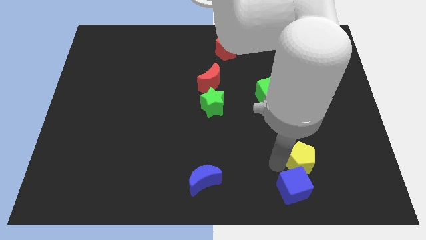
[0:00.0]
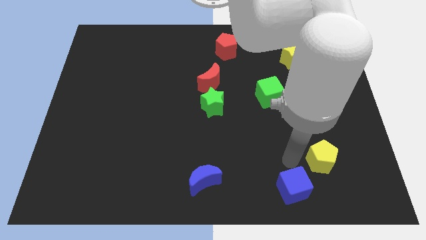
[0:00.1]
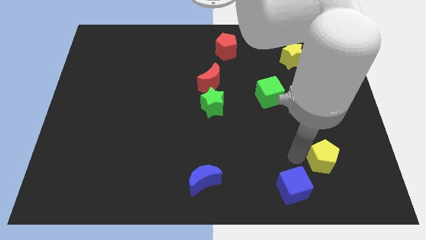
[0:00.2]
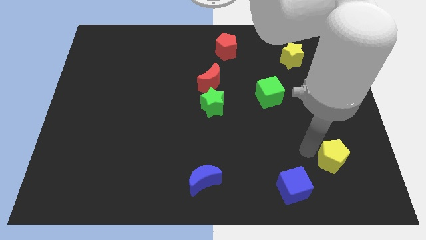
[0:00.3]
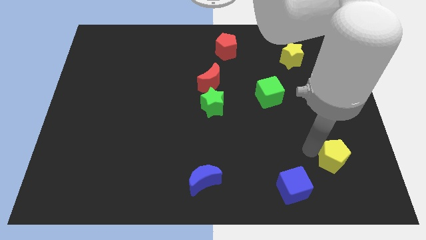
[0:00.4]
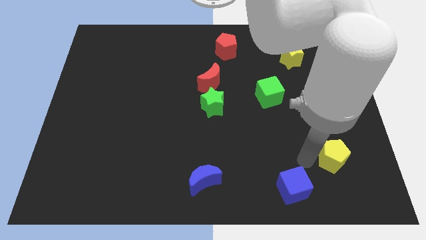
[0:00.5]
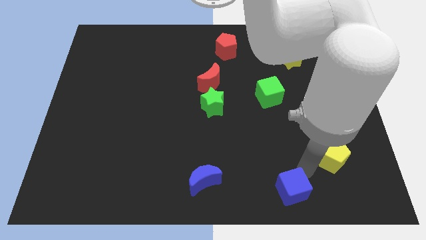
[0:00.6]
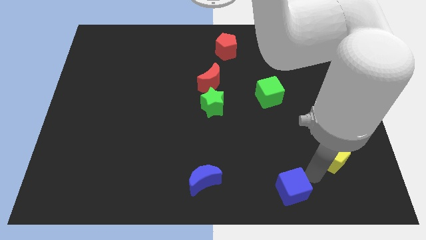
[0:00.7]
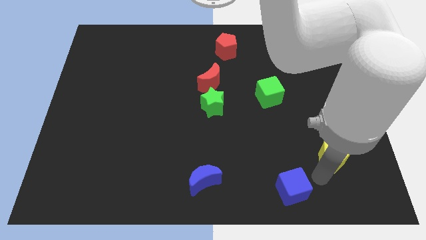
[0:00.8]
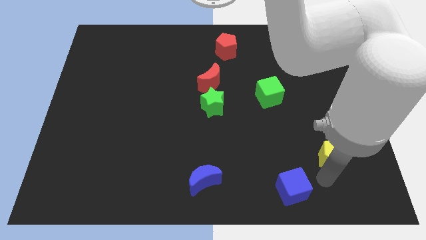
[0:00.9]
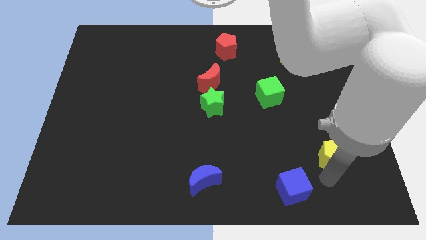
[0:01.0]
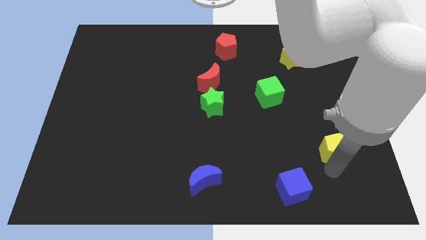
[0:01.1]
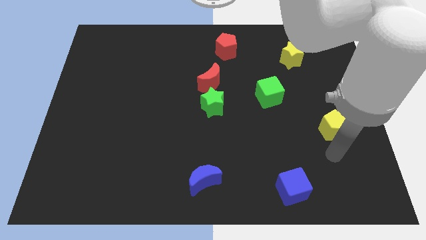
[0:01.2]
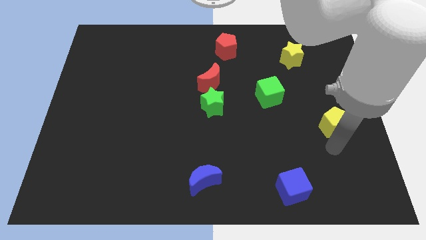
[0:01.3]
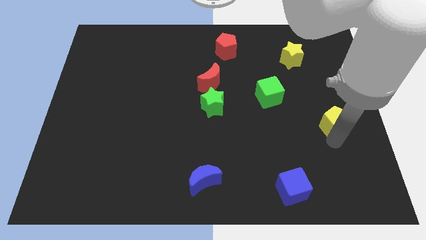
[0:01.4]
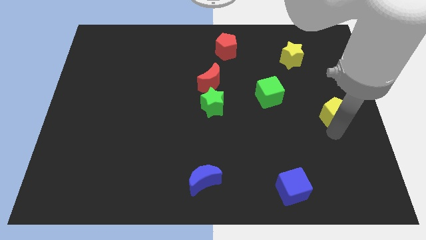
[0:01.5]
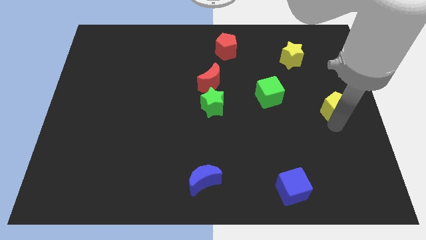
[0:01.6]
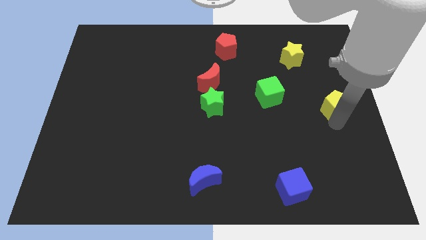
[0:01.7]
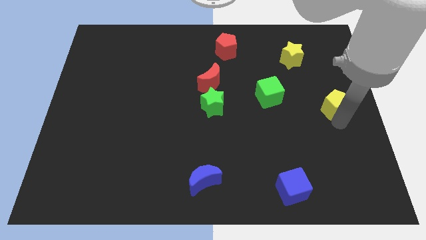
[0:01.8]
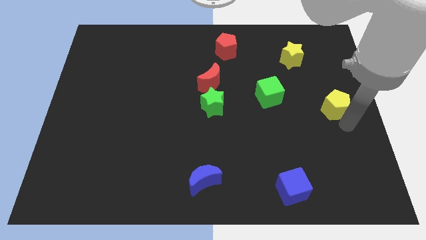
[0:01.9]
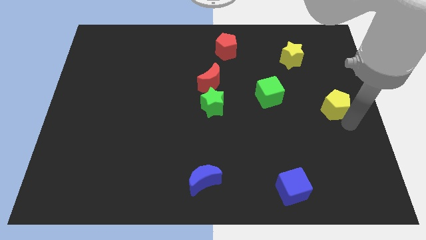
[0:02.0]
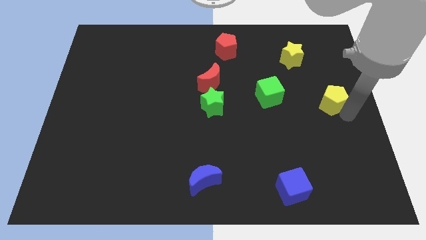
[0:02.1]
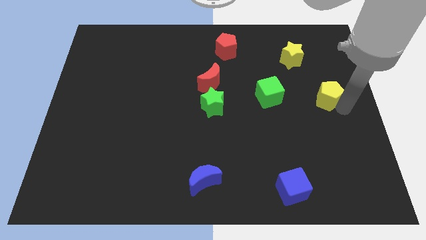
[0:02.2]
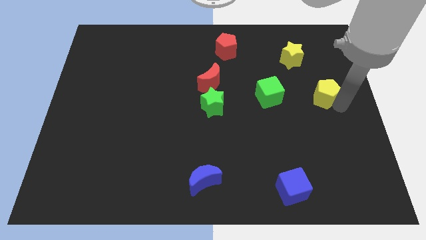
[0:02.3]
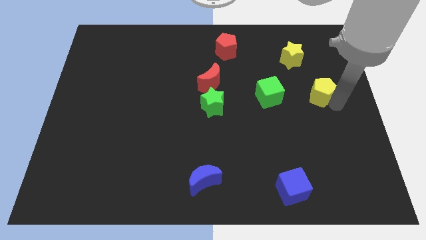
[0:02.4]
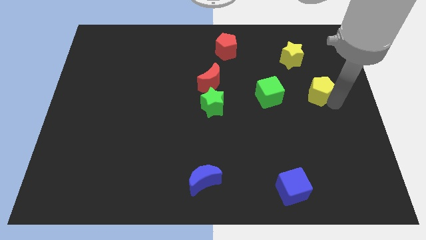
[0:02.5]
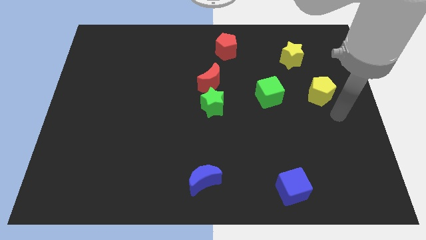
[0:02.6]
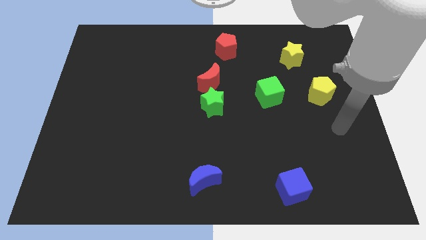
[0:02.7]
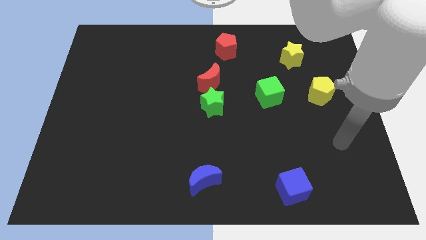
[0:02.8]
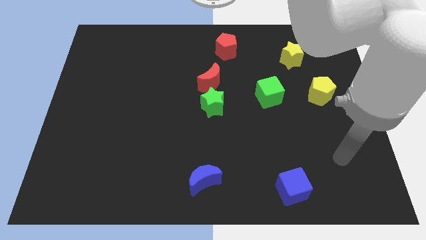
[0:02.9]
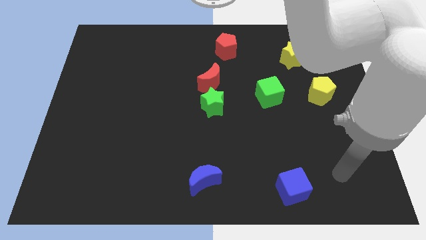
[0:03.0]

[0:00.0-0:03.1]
place yellow pentagon to the right of green cube

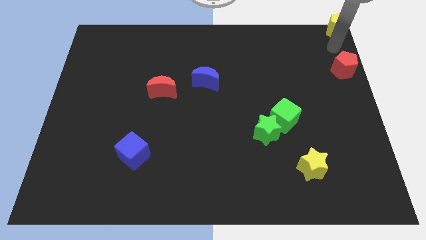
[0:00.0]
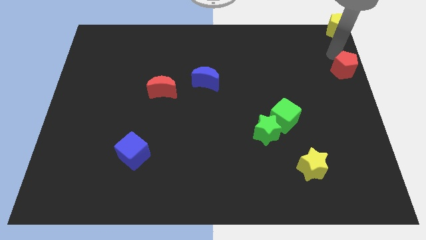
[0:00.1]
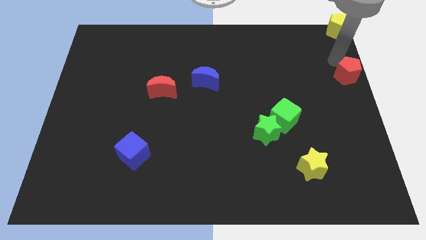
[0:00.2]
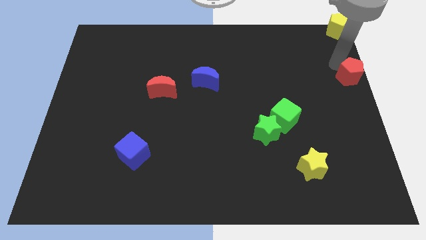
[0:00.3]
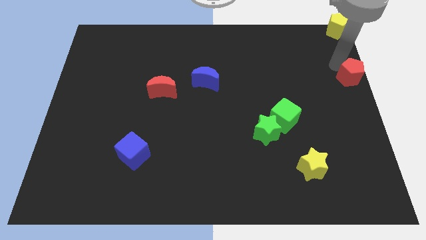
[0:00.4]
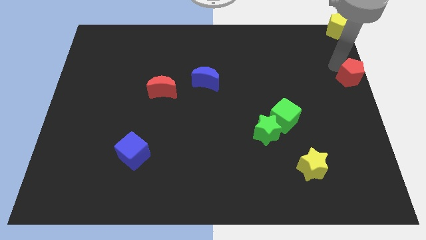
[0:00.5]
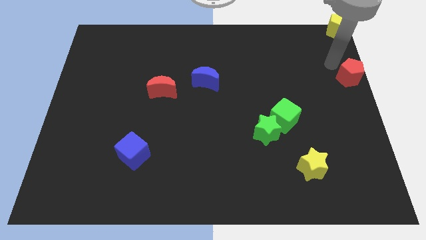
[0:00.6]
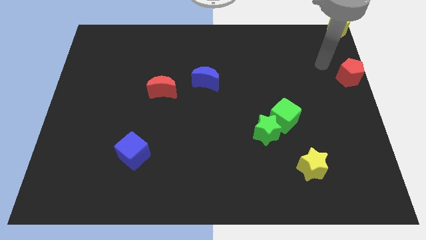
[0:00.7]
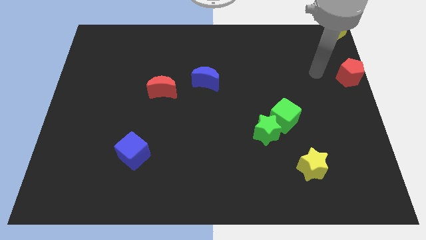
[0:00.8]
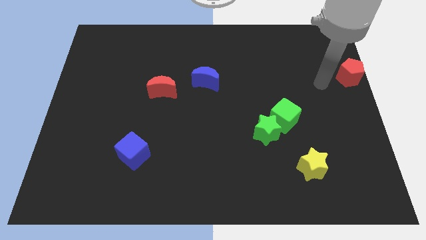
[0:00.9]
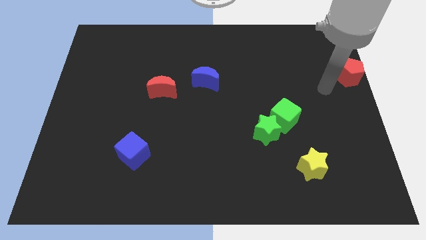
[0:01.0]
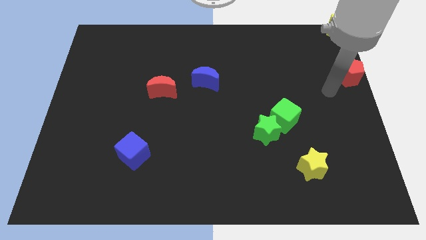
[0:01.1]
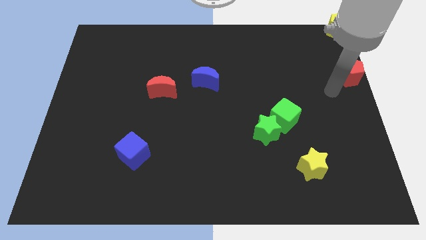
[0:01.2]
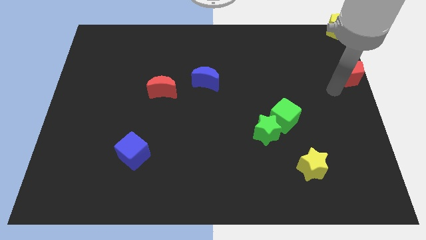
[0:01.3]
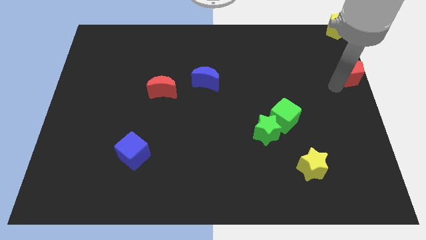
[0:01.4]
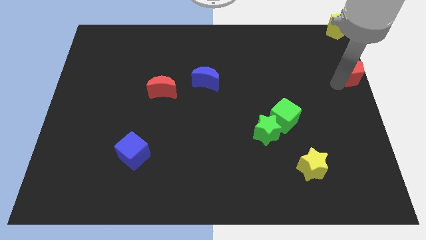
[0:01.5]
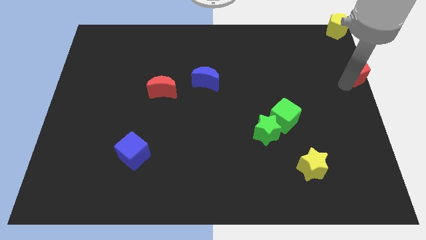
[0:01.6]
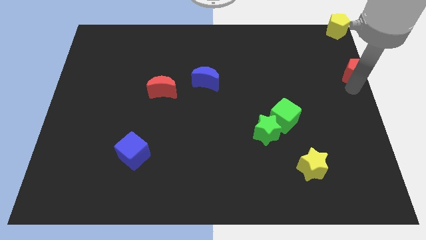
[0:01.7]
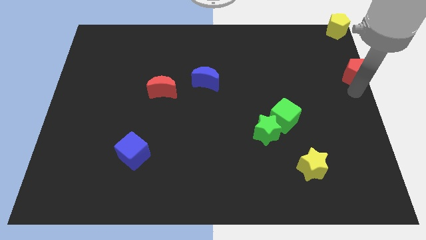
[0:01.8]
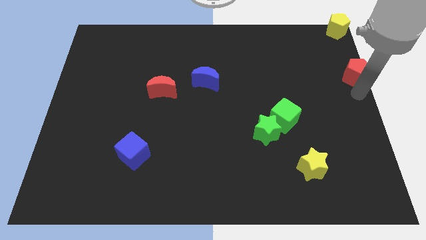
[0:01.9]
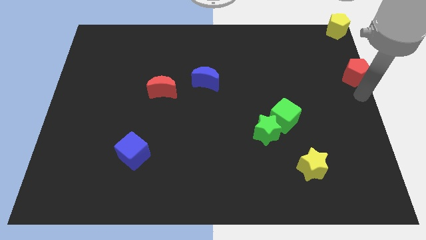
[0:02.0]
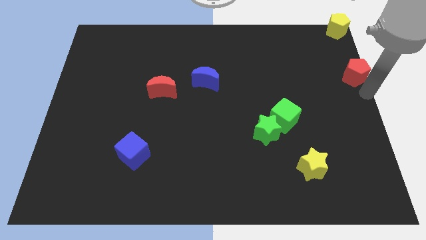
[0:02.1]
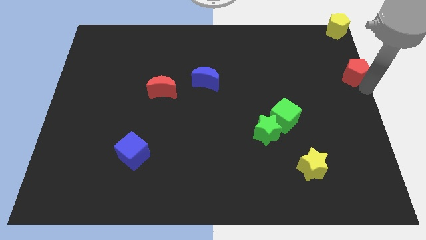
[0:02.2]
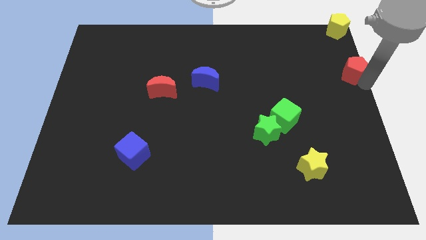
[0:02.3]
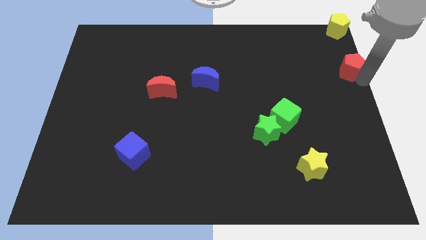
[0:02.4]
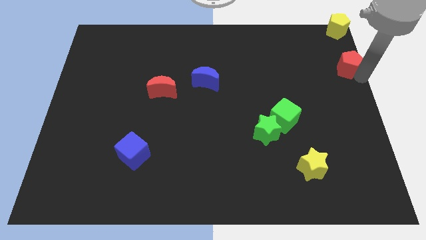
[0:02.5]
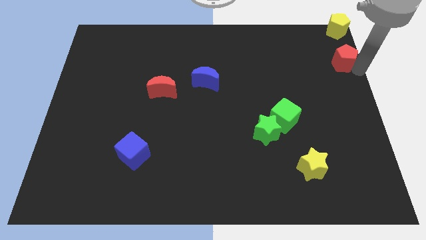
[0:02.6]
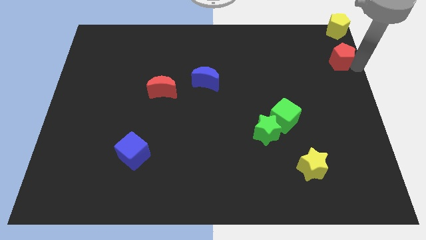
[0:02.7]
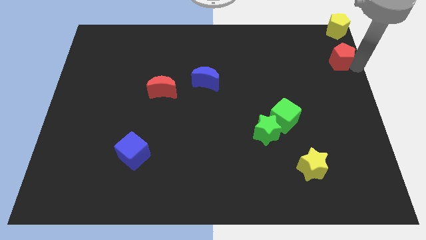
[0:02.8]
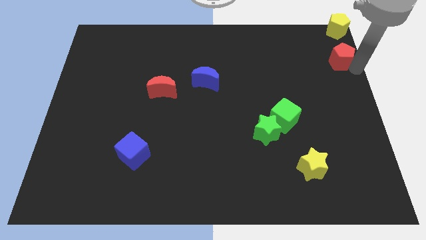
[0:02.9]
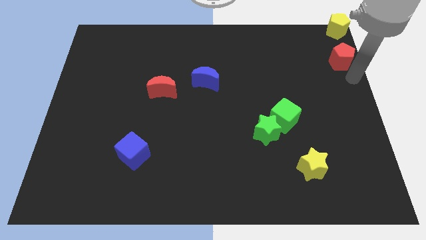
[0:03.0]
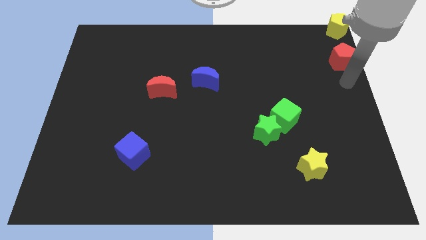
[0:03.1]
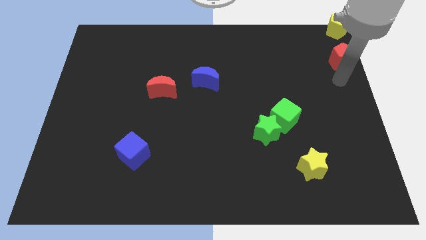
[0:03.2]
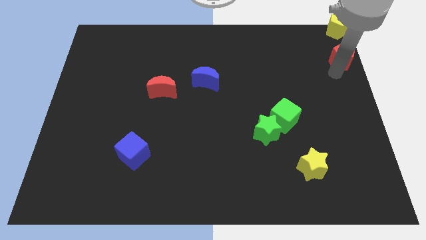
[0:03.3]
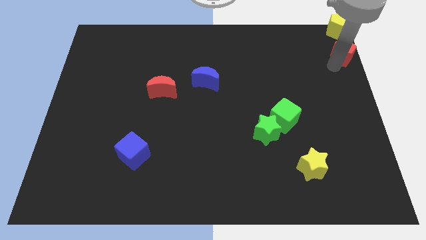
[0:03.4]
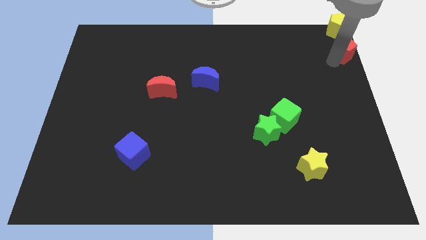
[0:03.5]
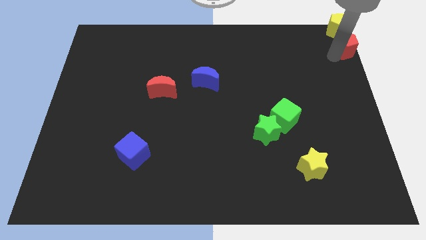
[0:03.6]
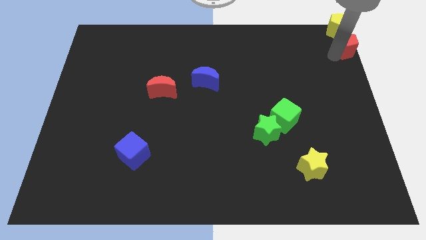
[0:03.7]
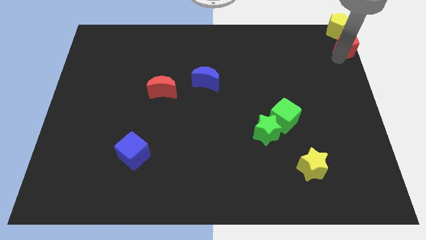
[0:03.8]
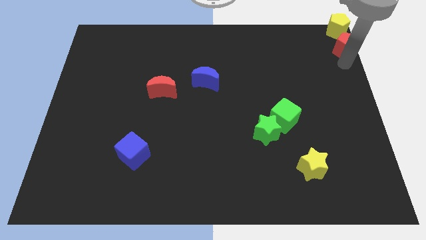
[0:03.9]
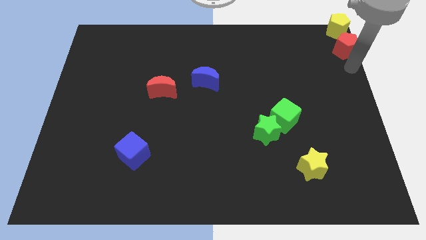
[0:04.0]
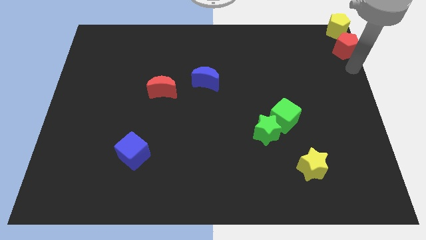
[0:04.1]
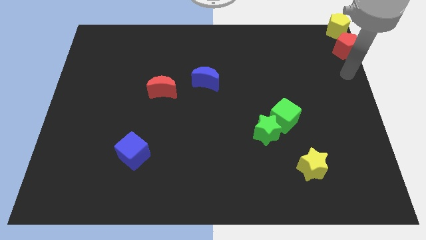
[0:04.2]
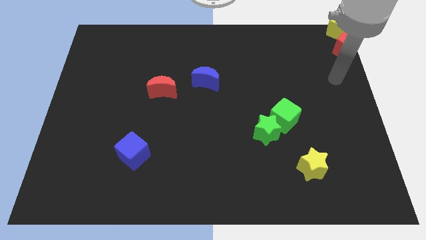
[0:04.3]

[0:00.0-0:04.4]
push the red pentagon into the yellow pentagon

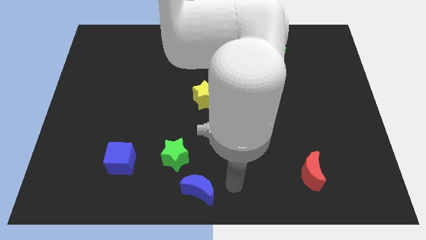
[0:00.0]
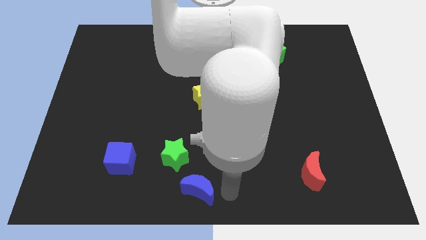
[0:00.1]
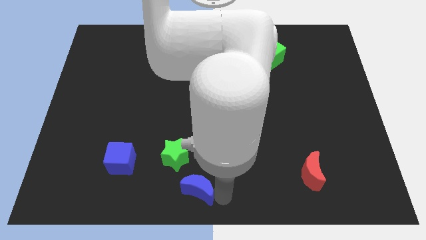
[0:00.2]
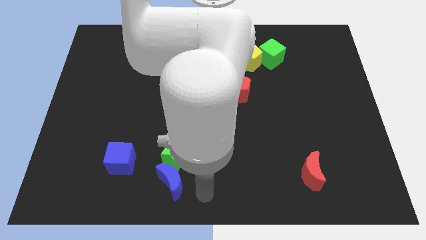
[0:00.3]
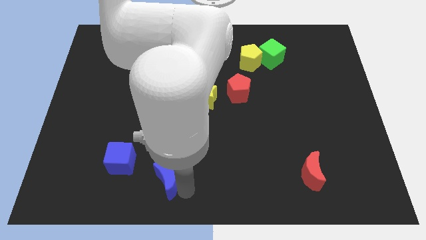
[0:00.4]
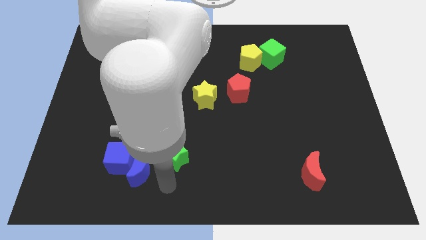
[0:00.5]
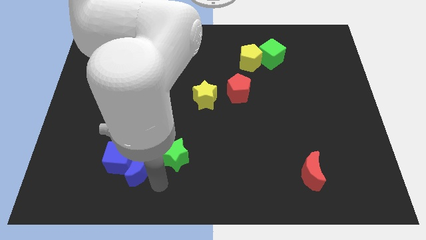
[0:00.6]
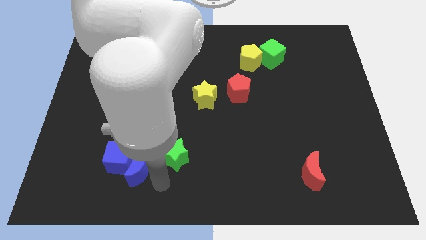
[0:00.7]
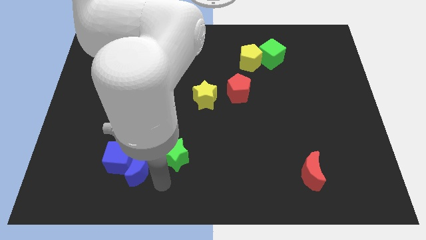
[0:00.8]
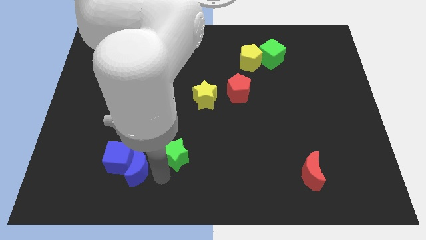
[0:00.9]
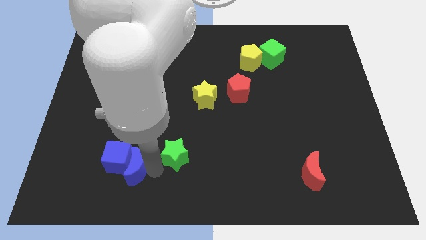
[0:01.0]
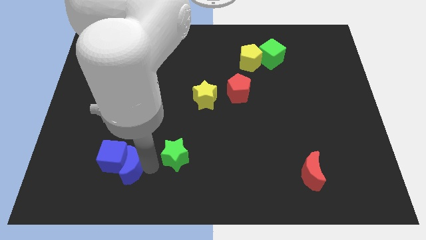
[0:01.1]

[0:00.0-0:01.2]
push the blue moon into the blue cube

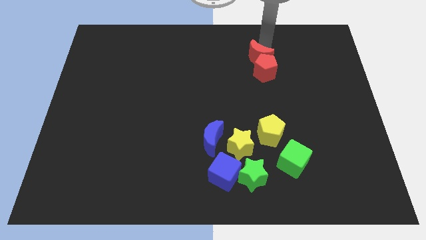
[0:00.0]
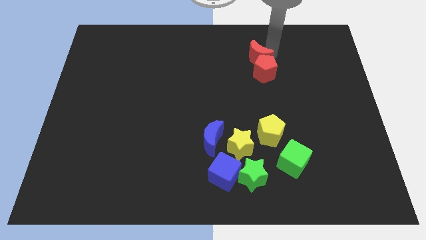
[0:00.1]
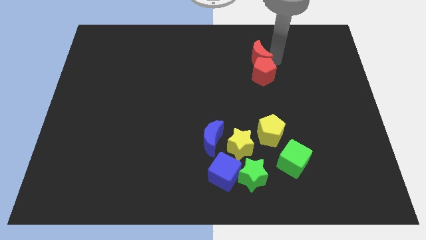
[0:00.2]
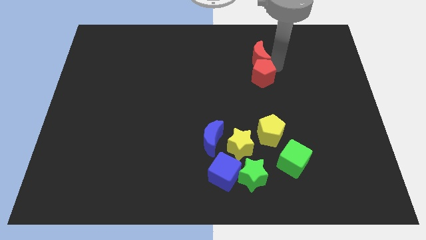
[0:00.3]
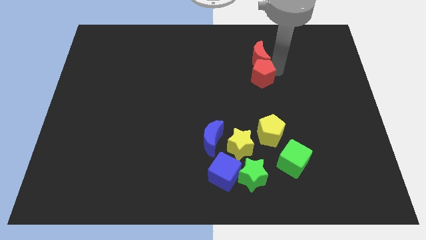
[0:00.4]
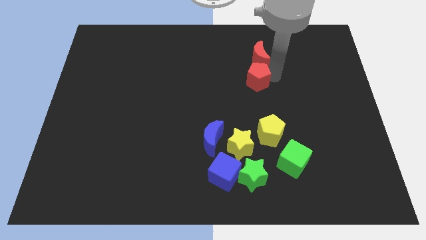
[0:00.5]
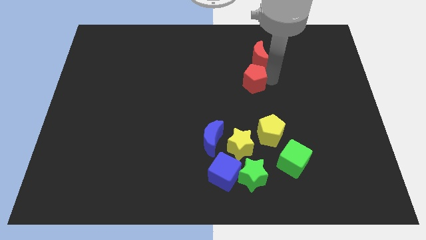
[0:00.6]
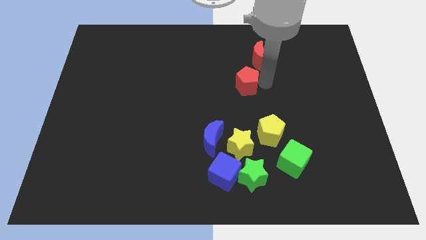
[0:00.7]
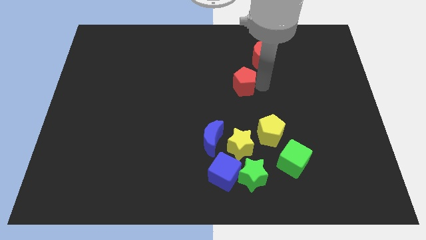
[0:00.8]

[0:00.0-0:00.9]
separate the red pentagon and red crescent
